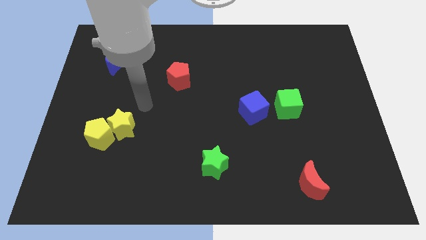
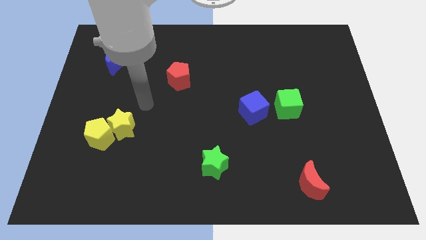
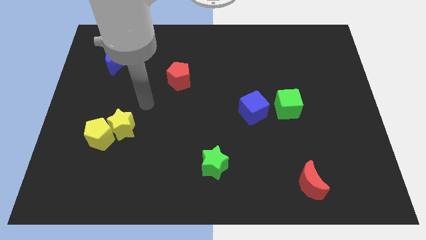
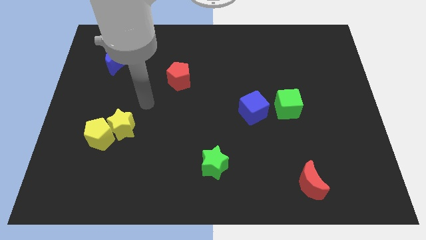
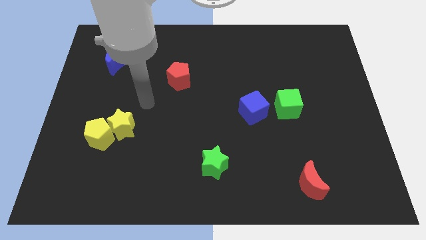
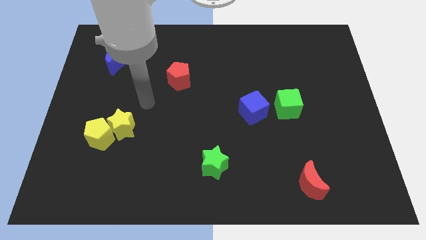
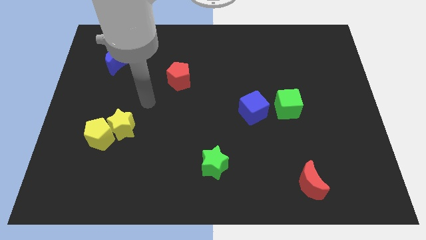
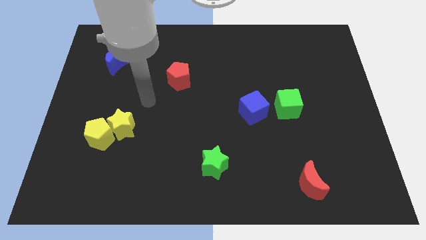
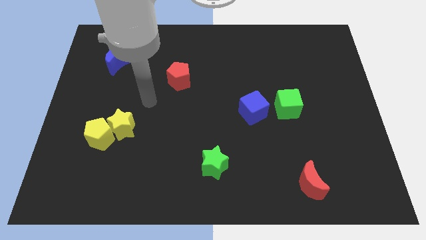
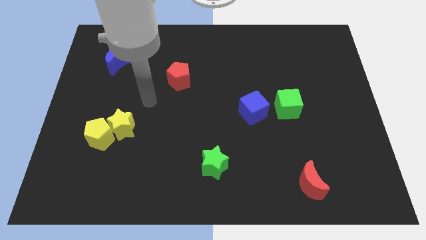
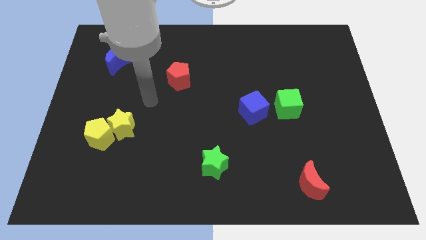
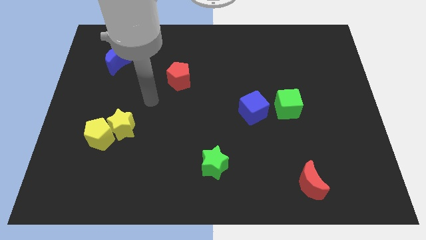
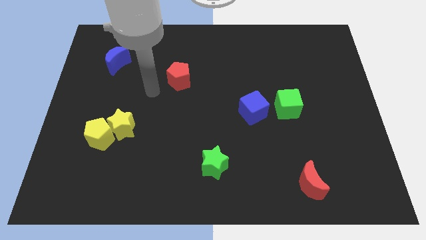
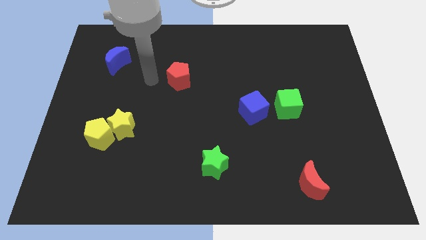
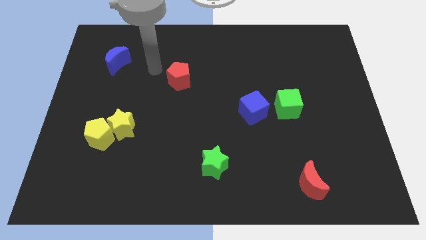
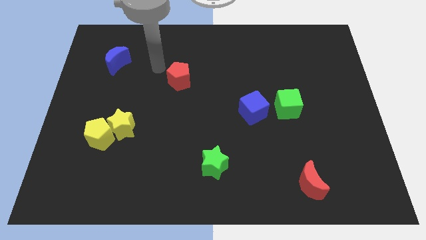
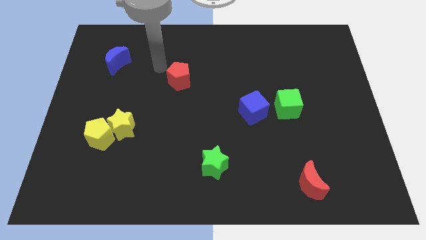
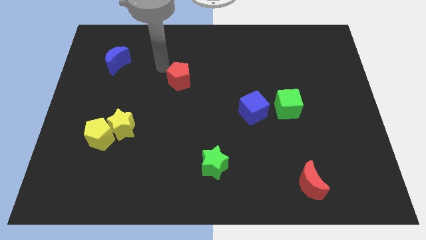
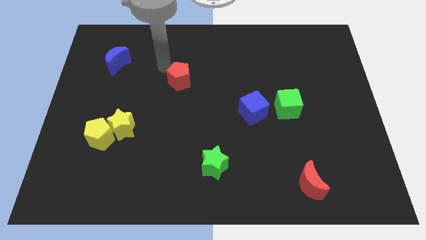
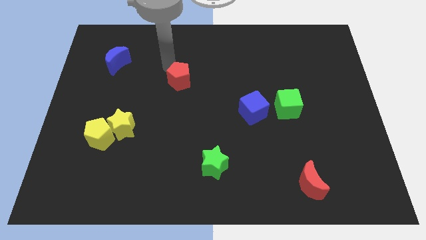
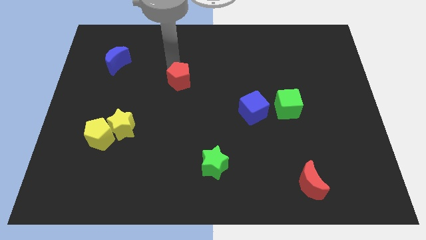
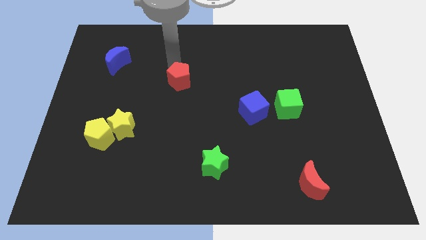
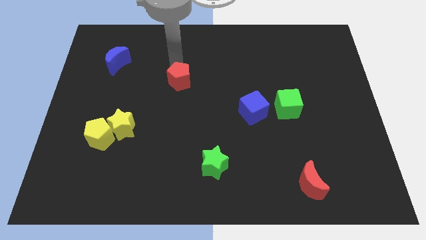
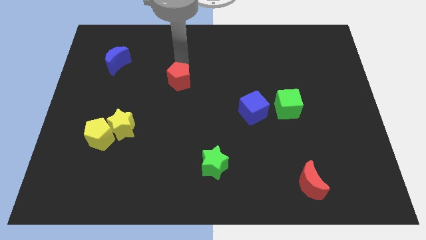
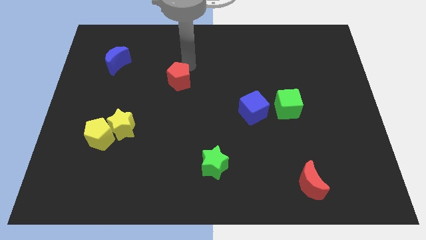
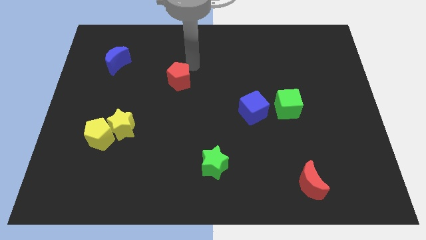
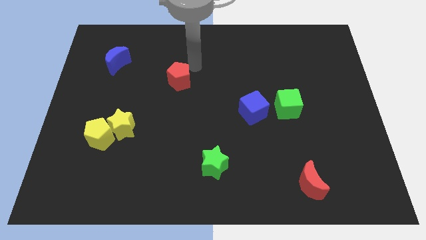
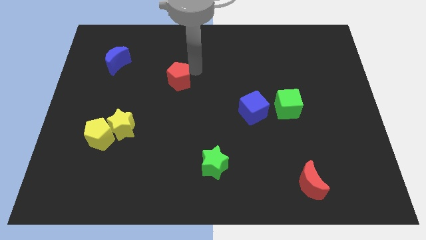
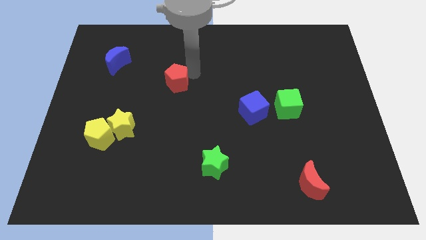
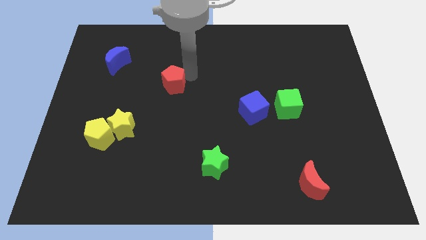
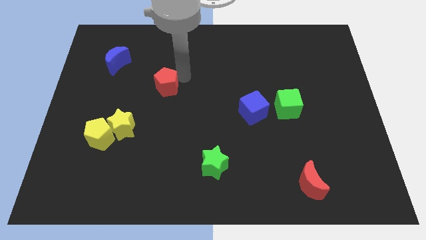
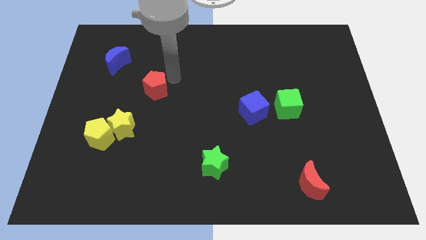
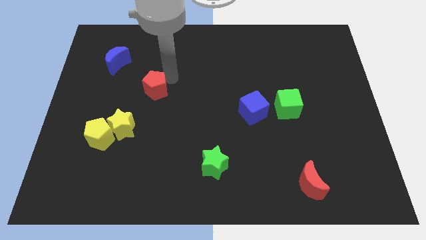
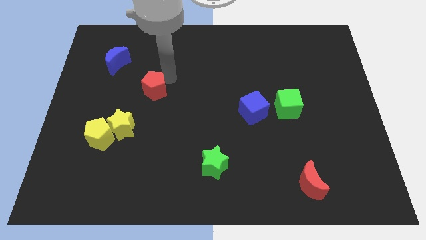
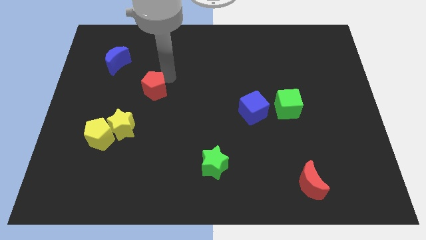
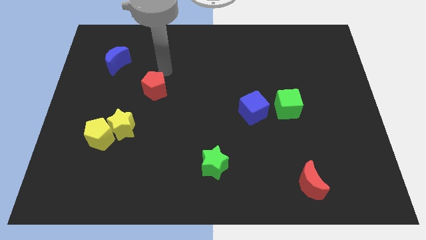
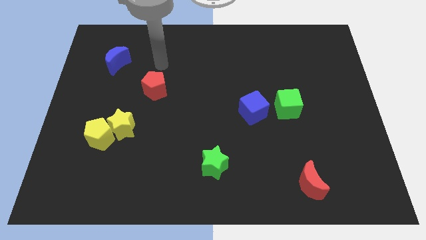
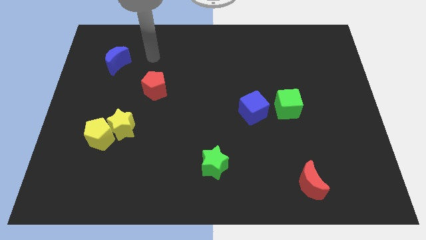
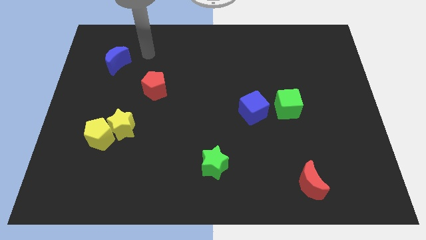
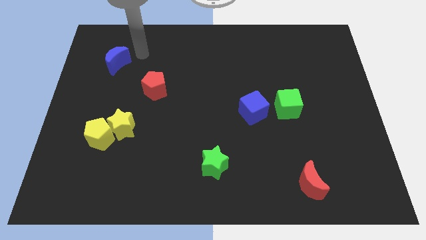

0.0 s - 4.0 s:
push the red pentagon to the left of the board

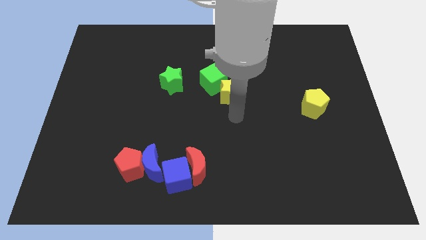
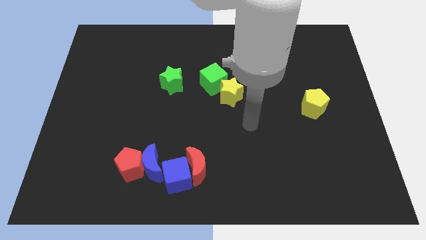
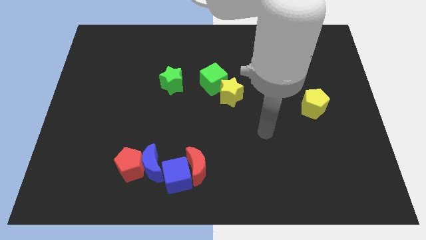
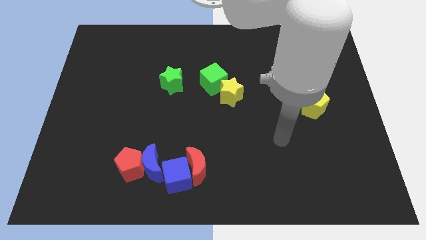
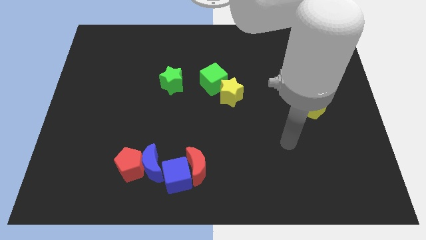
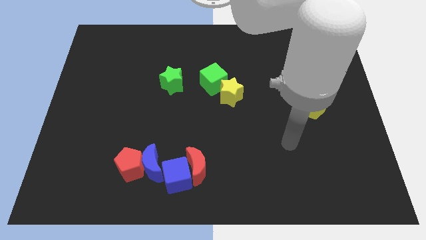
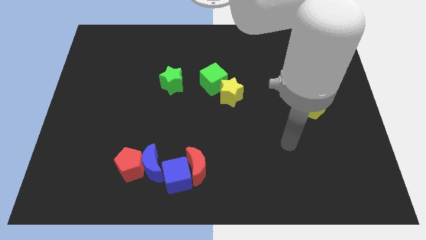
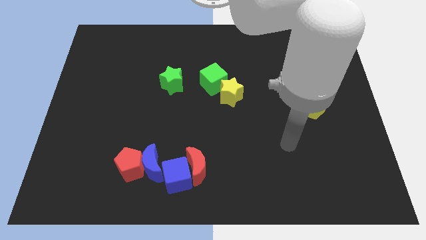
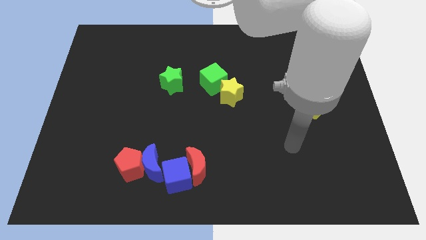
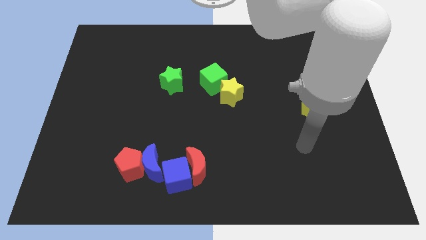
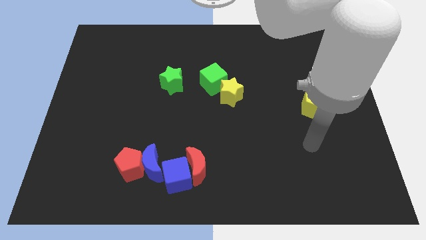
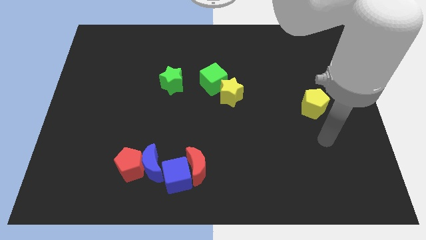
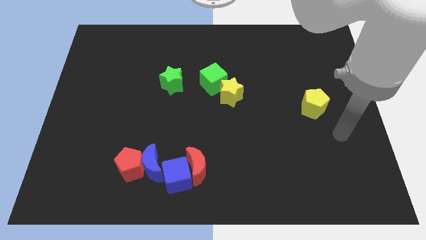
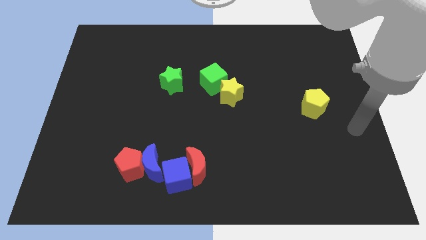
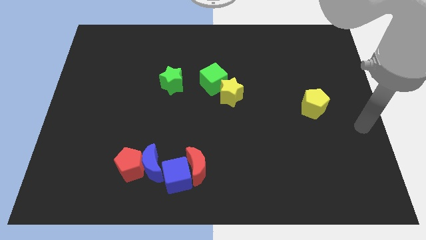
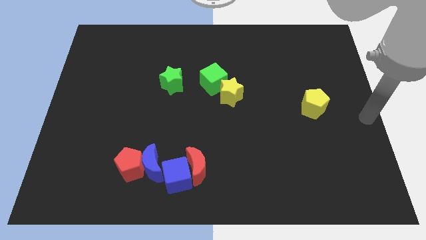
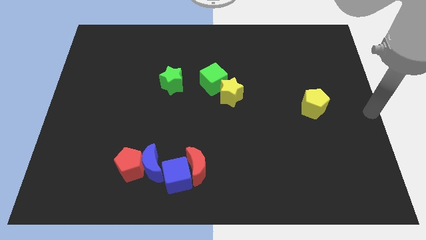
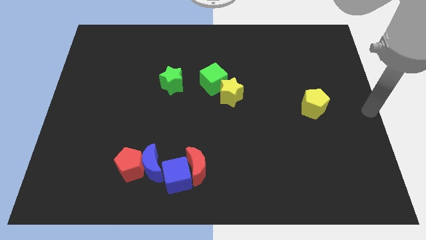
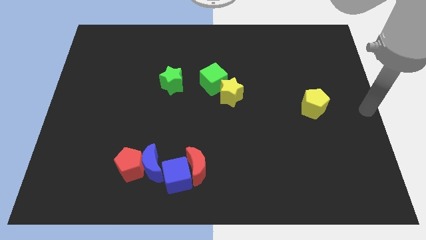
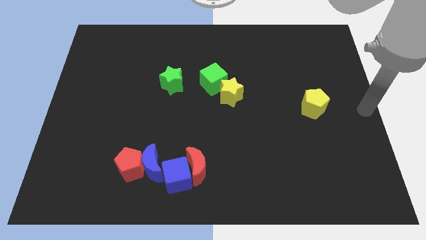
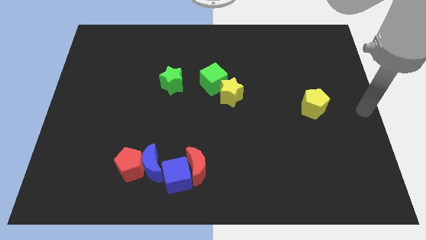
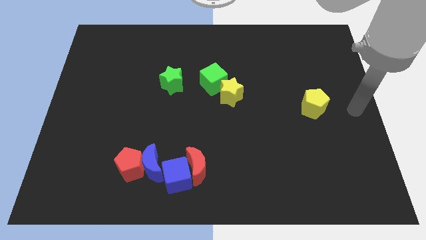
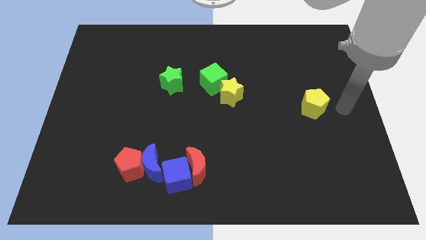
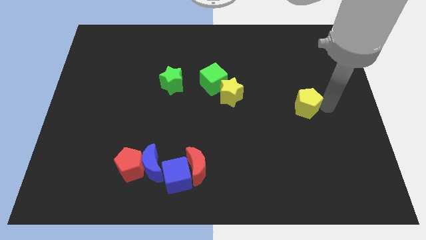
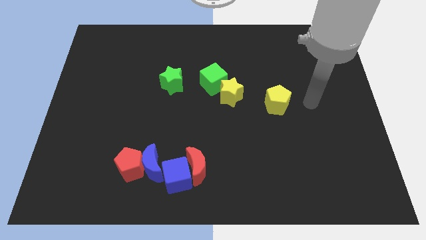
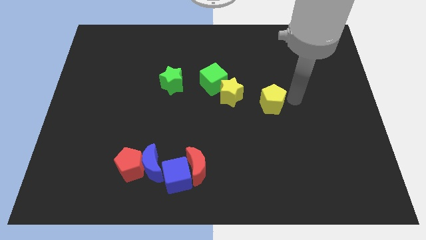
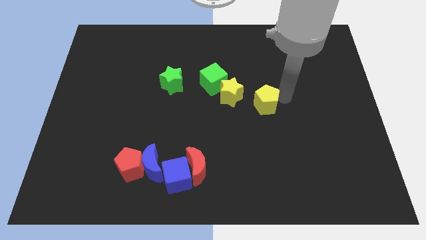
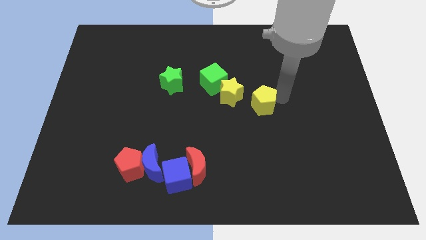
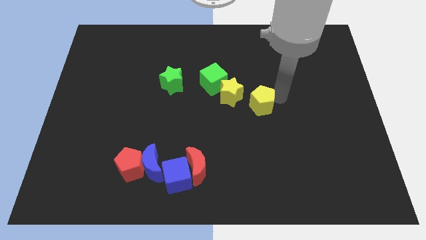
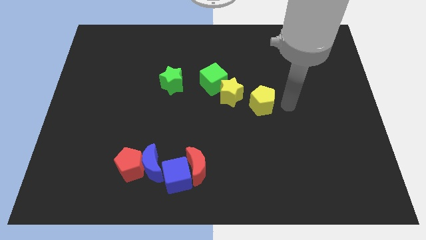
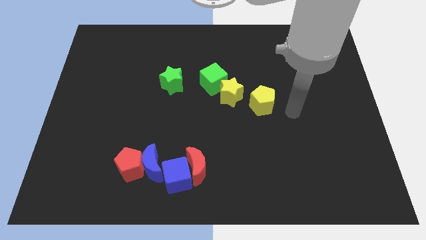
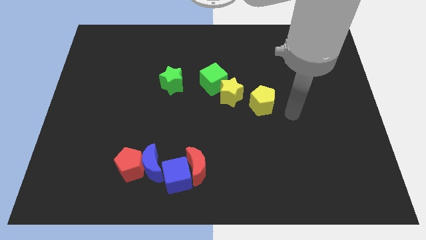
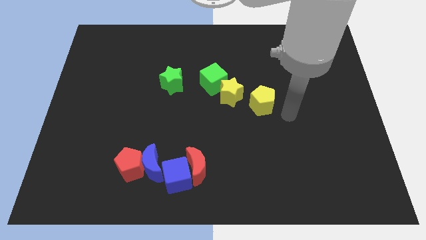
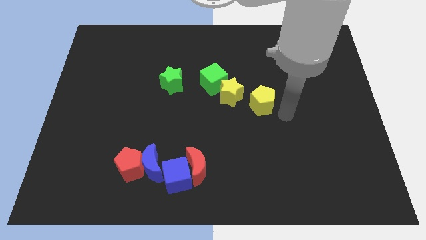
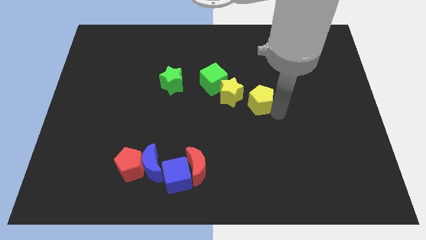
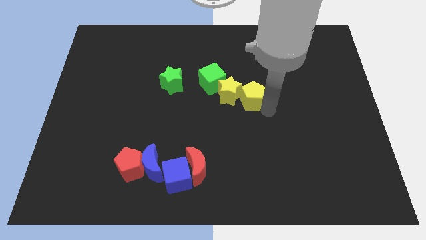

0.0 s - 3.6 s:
move the yellow pentagon into the yellow star

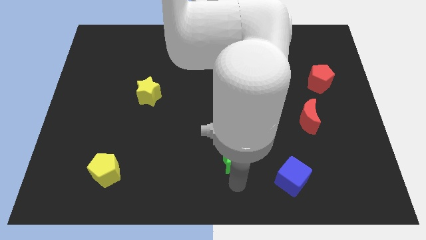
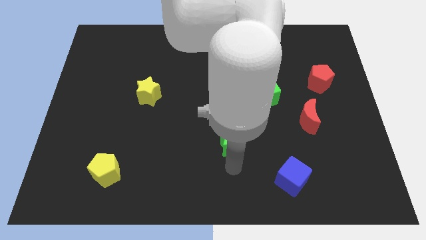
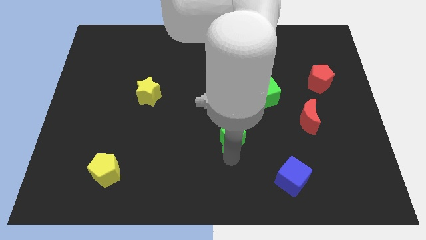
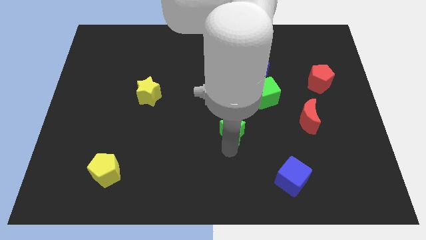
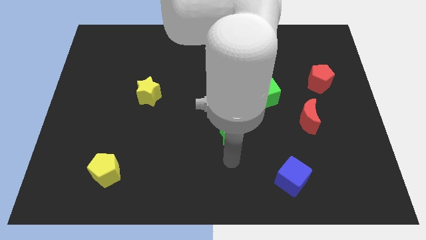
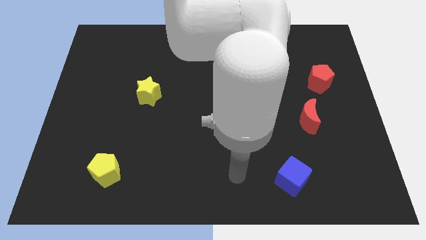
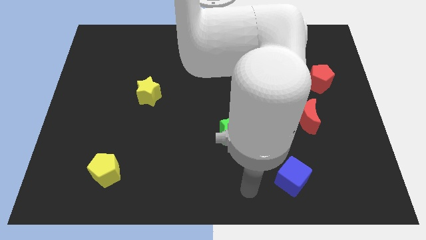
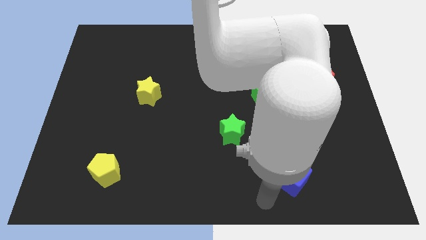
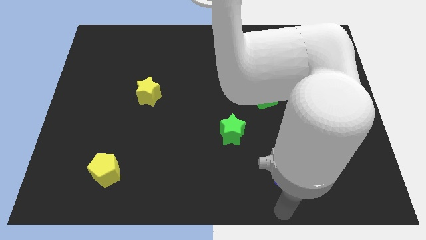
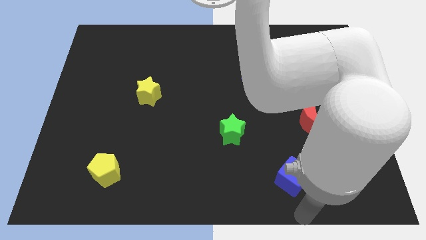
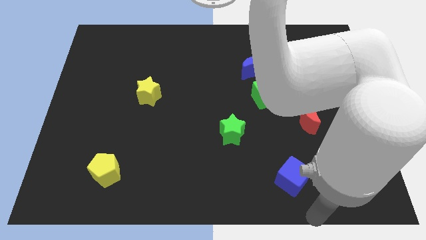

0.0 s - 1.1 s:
push the green star slightly to the top

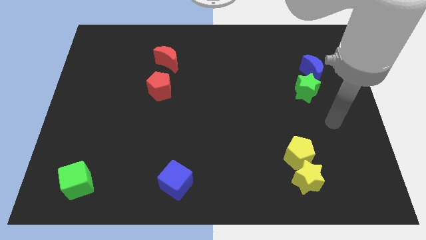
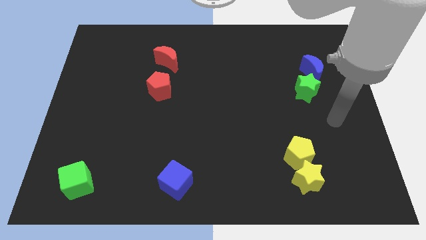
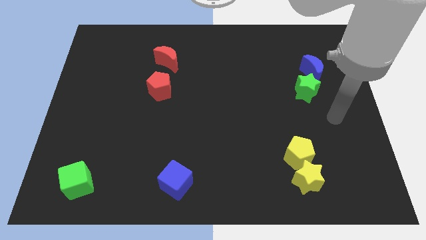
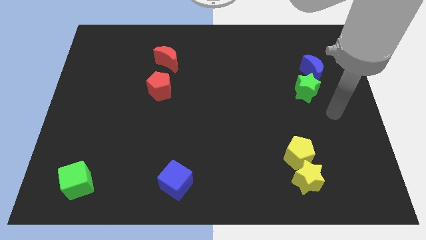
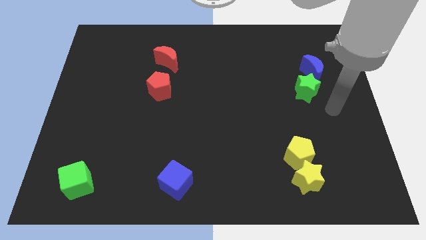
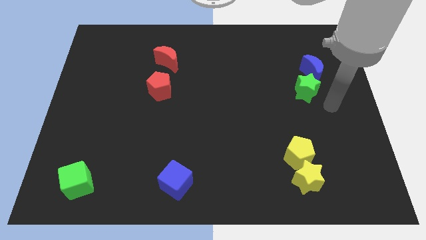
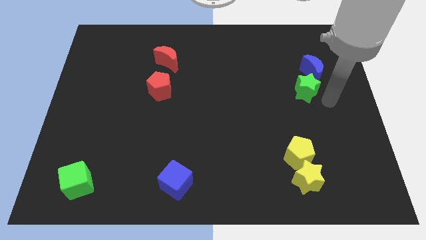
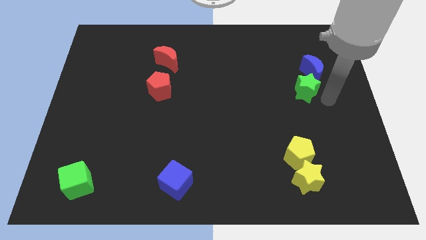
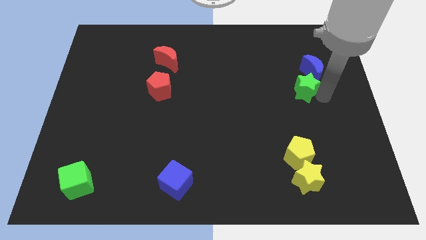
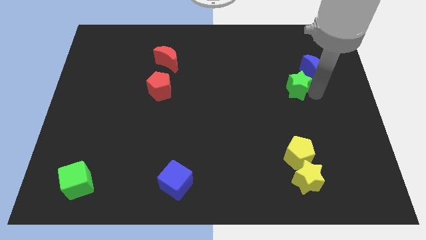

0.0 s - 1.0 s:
move arm towards green star
